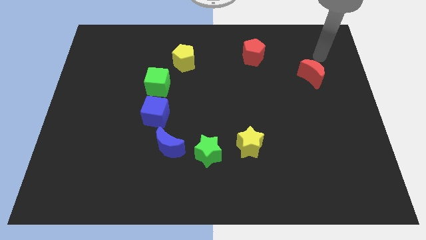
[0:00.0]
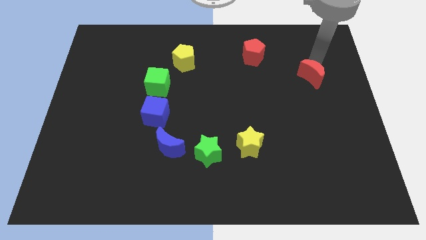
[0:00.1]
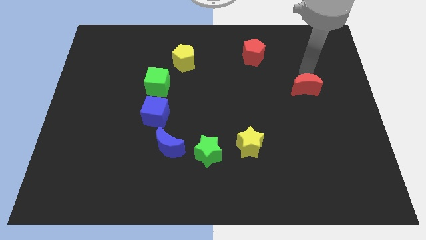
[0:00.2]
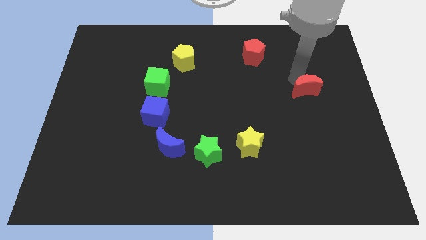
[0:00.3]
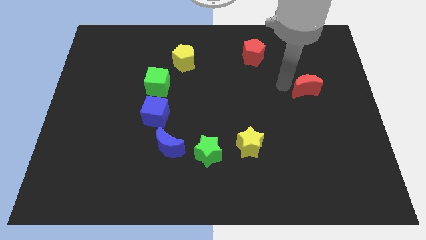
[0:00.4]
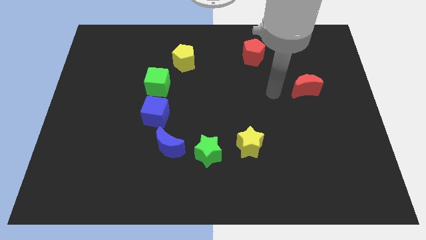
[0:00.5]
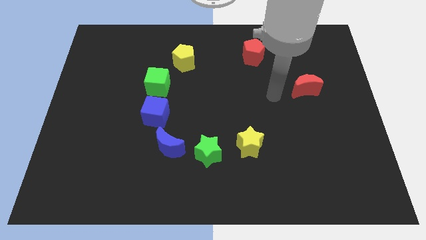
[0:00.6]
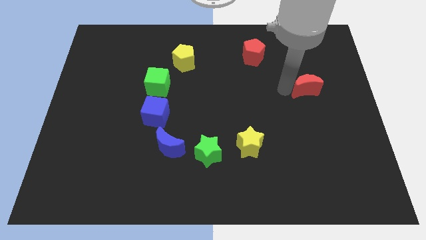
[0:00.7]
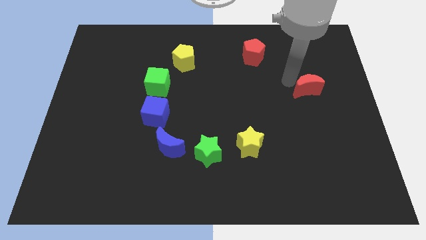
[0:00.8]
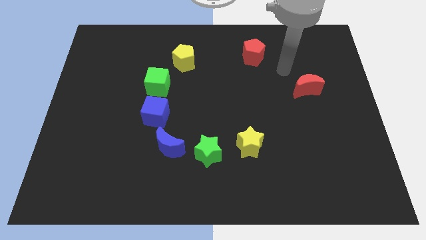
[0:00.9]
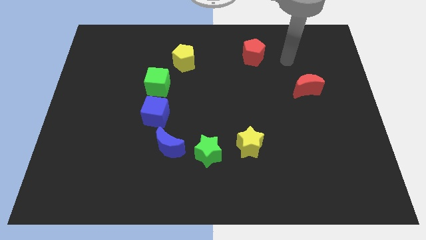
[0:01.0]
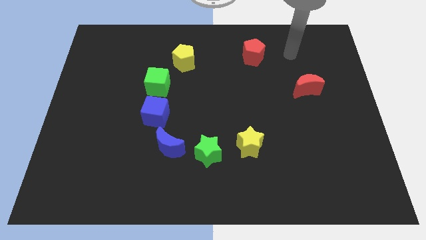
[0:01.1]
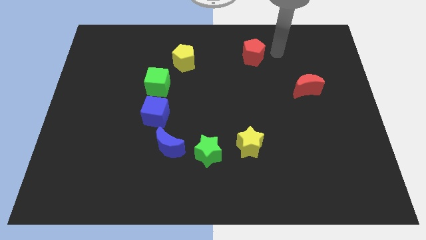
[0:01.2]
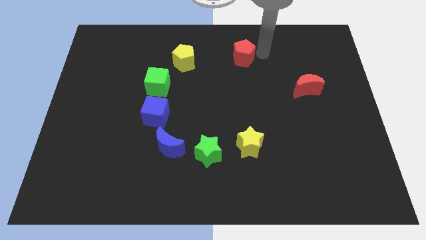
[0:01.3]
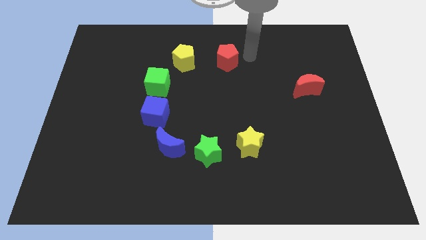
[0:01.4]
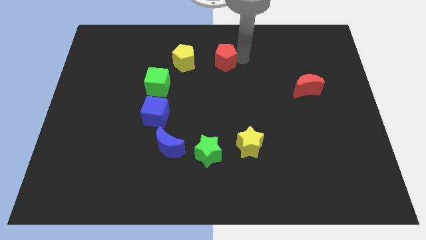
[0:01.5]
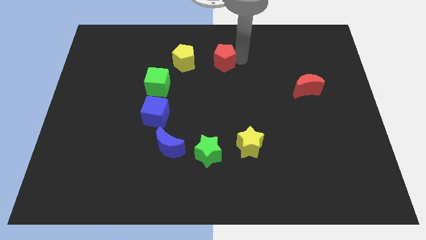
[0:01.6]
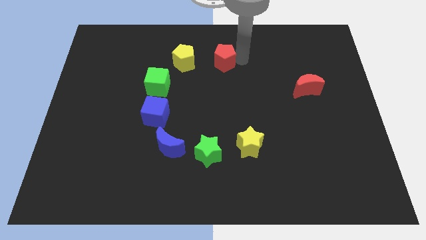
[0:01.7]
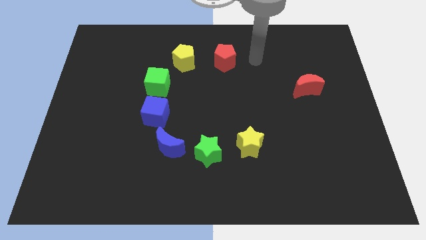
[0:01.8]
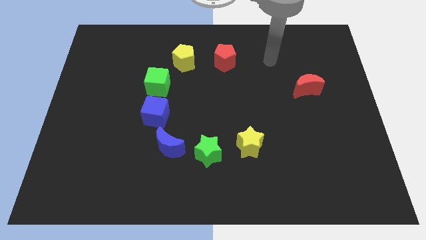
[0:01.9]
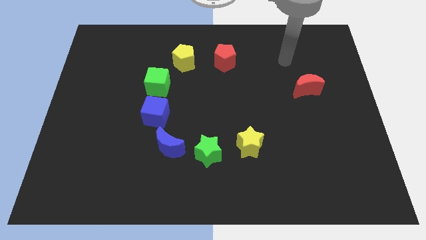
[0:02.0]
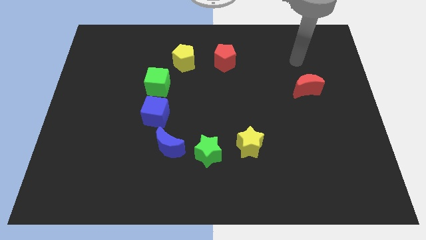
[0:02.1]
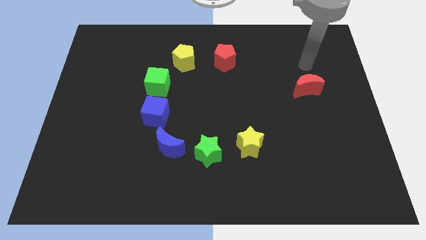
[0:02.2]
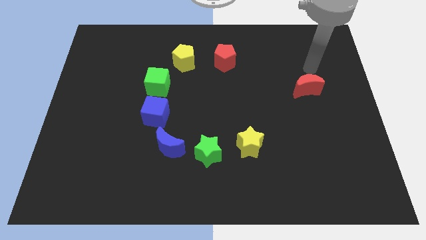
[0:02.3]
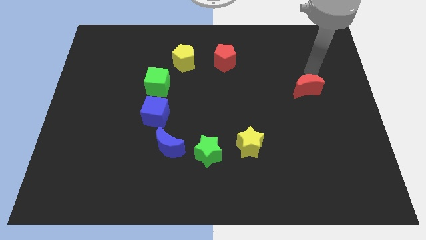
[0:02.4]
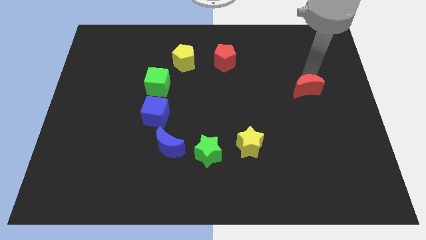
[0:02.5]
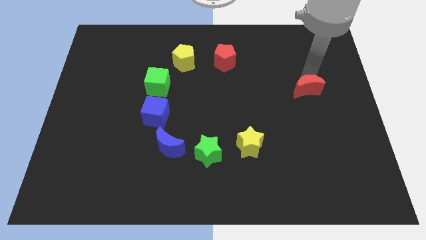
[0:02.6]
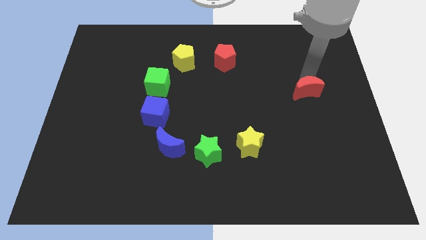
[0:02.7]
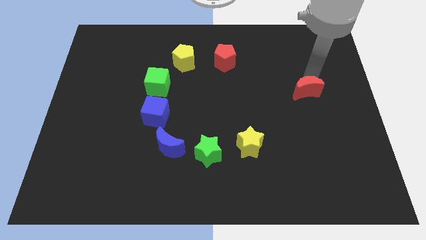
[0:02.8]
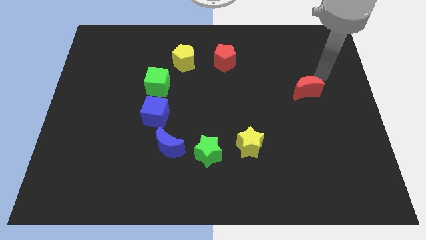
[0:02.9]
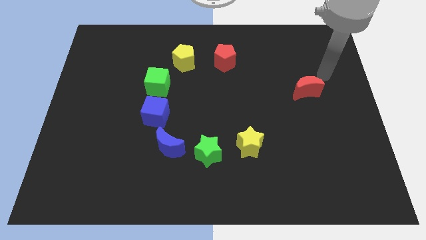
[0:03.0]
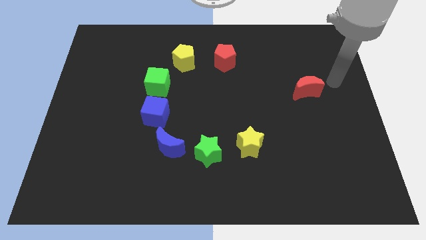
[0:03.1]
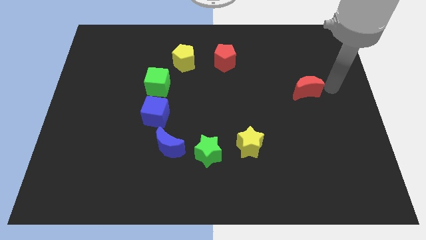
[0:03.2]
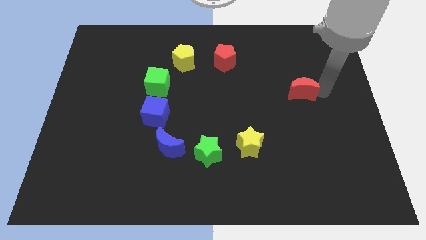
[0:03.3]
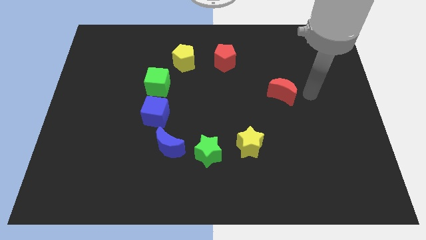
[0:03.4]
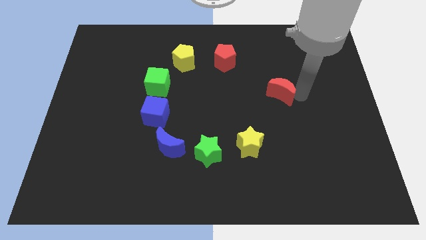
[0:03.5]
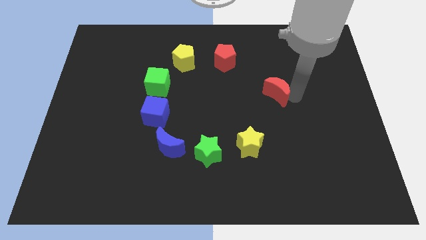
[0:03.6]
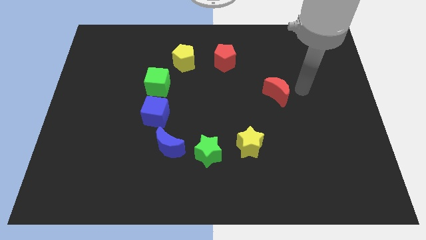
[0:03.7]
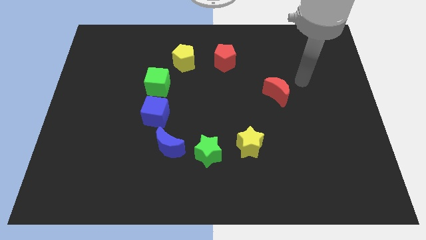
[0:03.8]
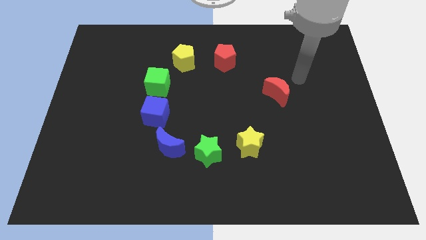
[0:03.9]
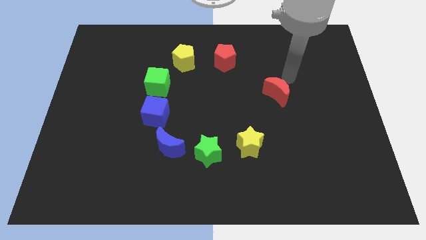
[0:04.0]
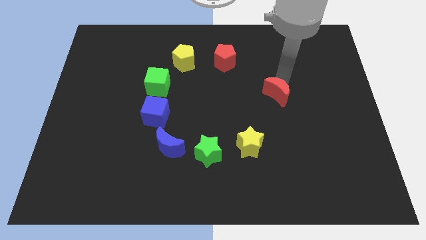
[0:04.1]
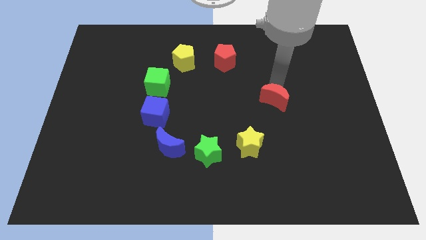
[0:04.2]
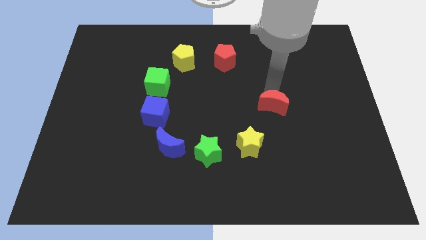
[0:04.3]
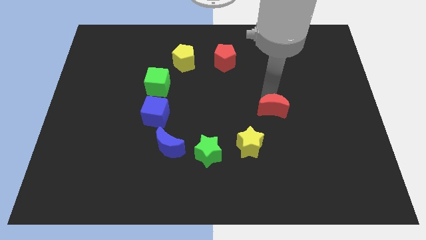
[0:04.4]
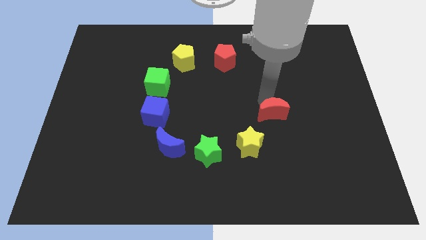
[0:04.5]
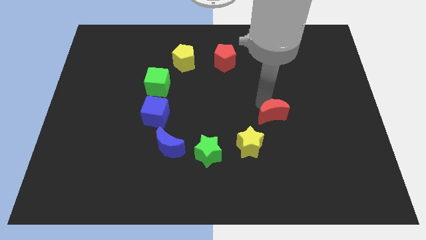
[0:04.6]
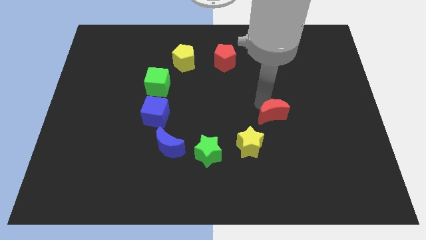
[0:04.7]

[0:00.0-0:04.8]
place red moon parallel to blue cube

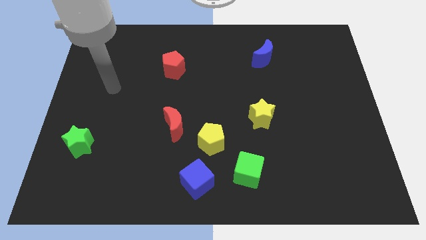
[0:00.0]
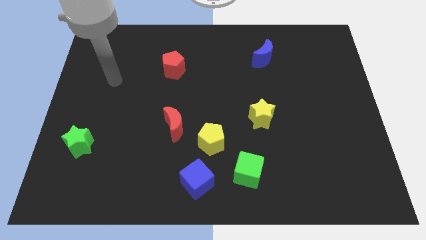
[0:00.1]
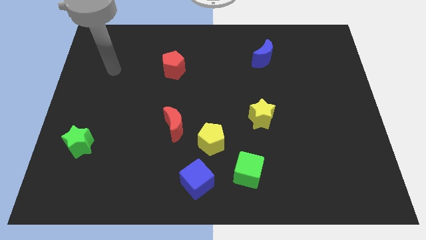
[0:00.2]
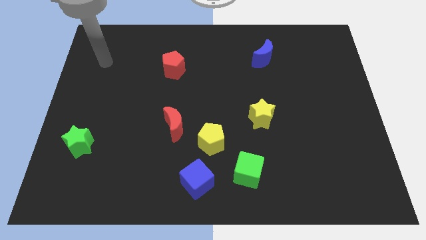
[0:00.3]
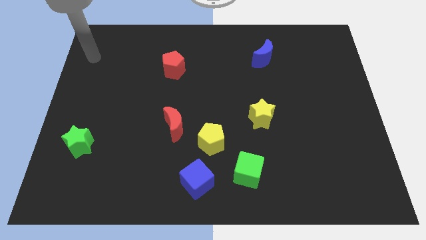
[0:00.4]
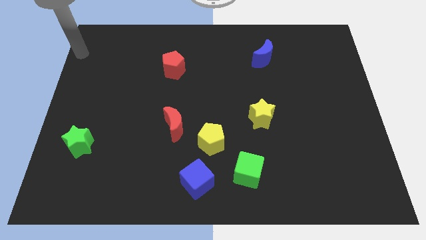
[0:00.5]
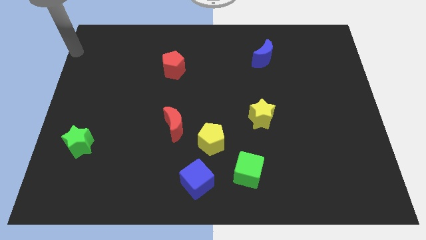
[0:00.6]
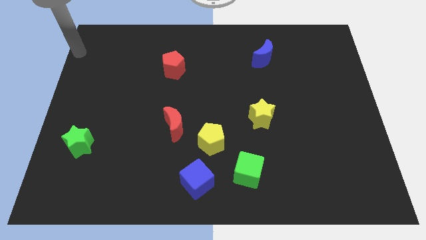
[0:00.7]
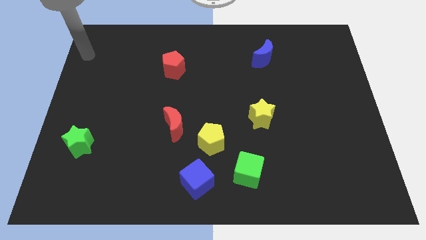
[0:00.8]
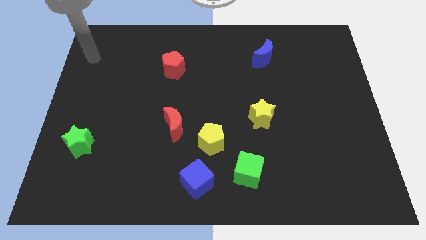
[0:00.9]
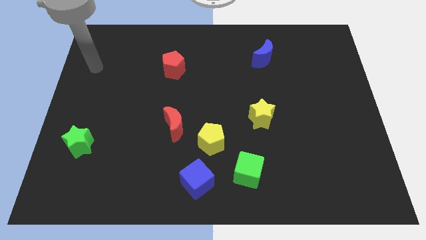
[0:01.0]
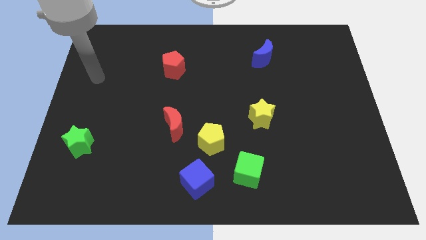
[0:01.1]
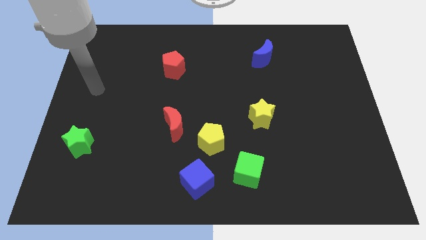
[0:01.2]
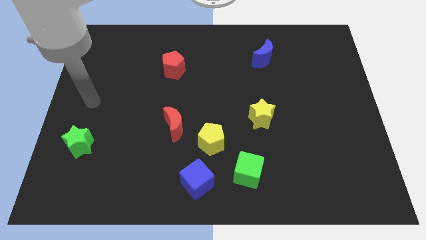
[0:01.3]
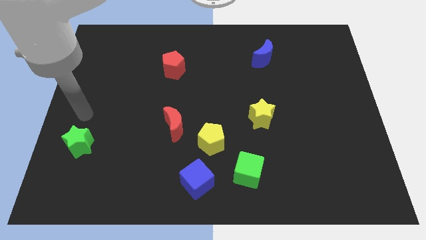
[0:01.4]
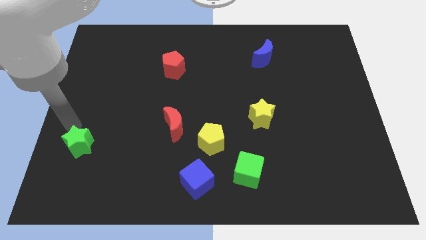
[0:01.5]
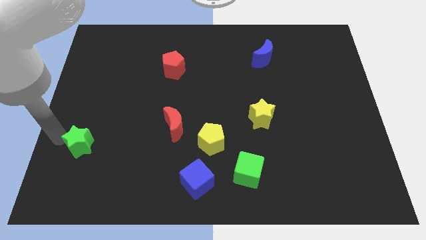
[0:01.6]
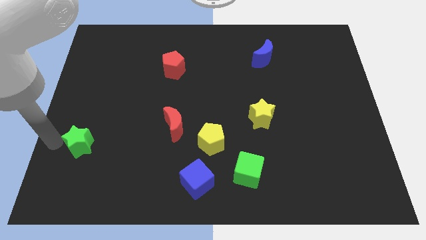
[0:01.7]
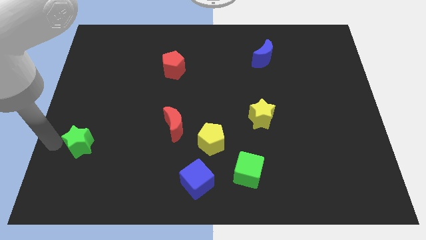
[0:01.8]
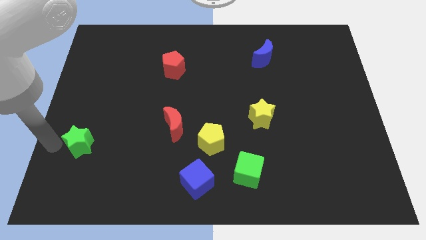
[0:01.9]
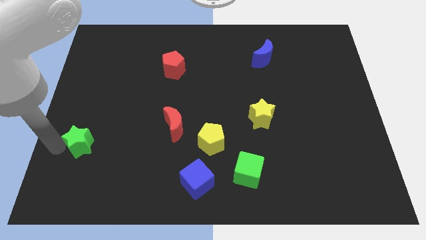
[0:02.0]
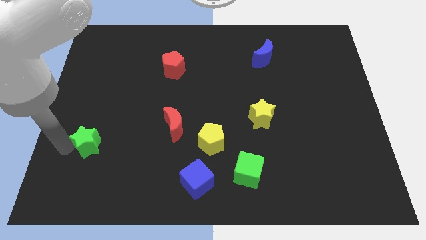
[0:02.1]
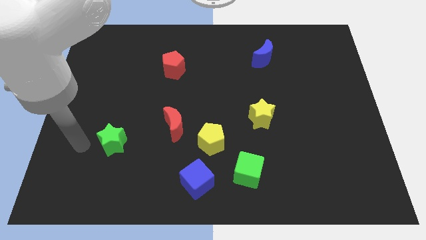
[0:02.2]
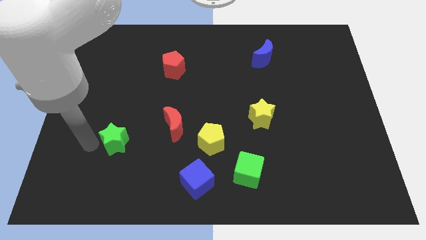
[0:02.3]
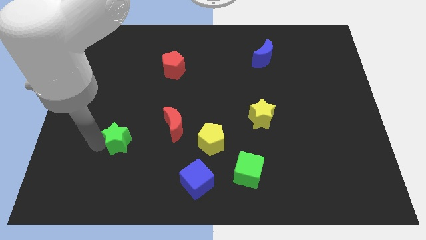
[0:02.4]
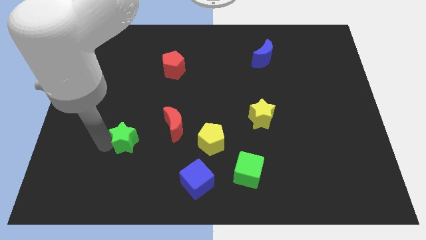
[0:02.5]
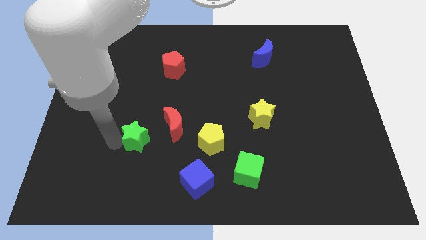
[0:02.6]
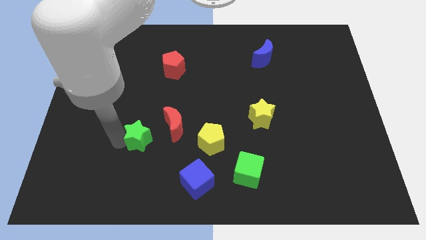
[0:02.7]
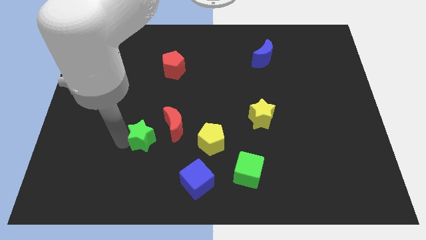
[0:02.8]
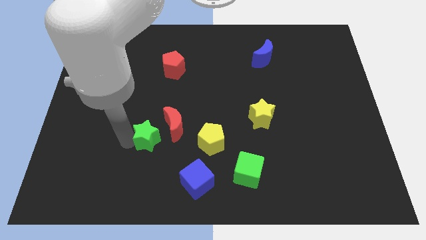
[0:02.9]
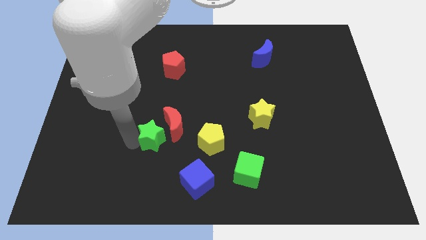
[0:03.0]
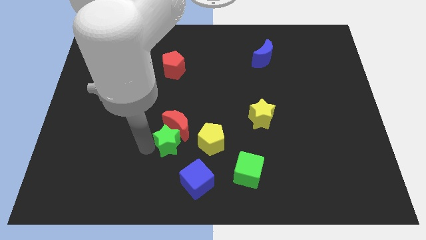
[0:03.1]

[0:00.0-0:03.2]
move the green star towards red crescent

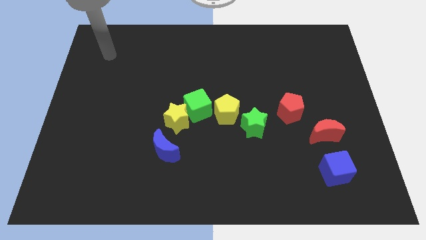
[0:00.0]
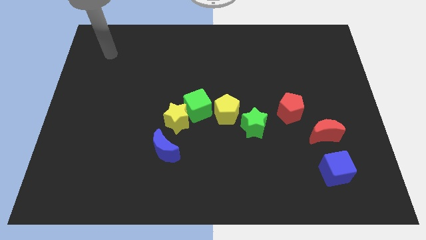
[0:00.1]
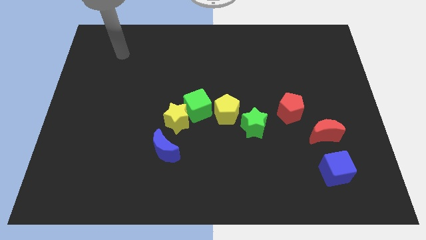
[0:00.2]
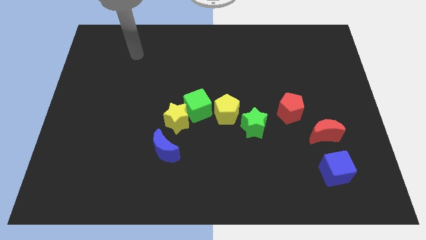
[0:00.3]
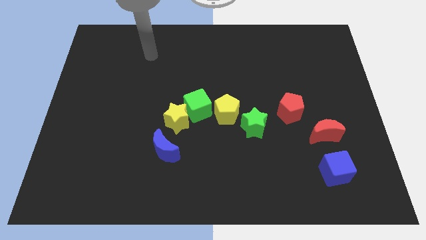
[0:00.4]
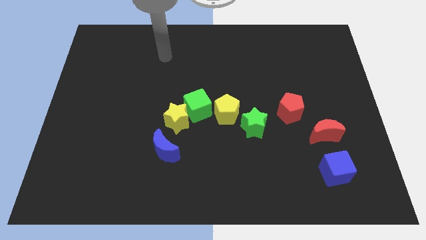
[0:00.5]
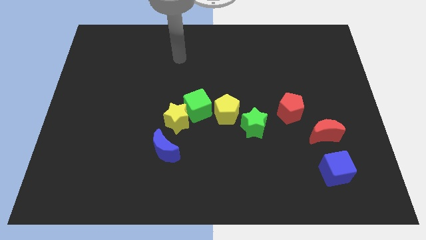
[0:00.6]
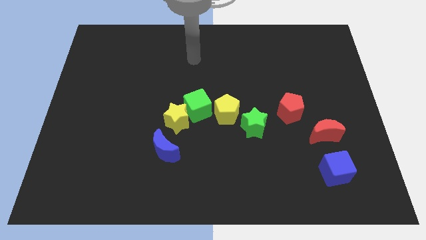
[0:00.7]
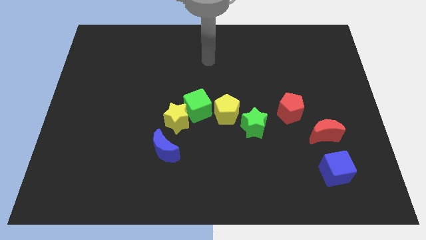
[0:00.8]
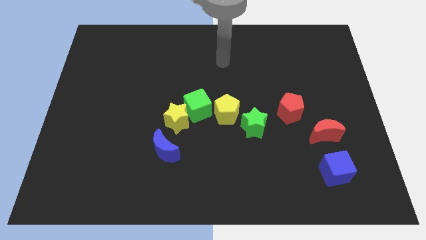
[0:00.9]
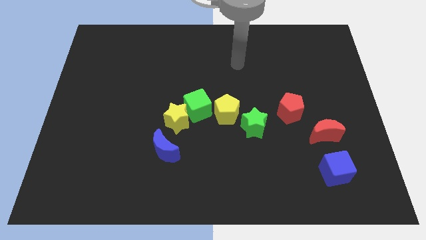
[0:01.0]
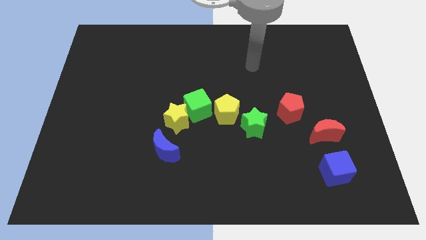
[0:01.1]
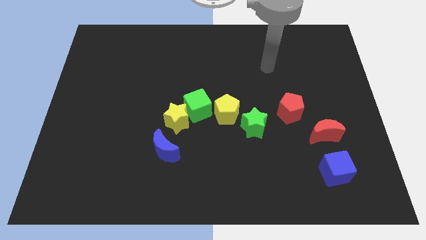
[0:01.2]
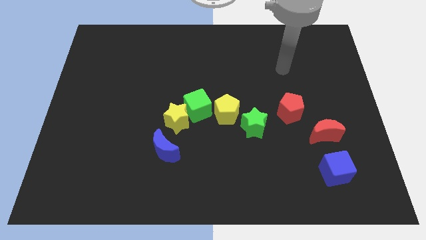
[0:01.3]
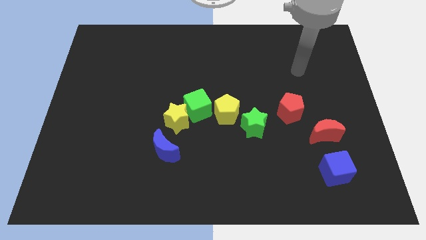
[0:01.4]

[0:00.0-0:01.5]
point your arm above the red pentagon
